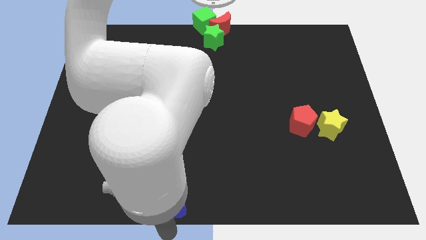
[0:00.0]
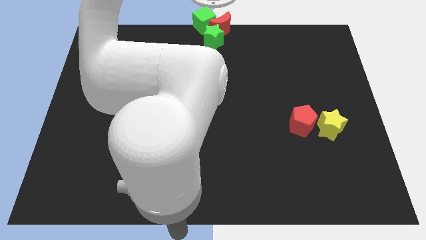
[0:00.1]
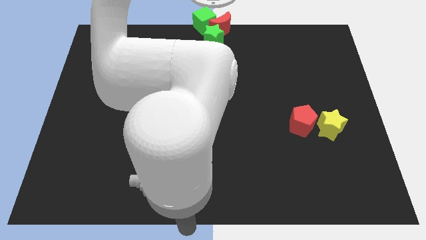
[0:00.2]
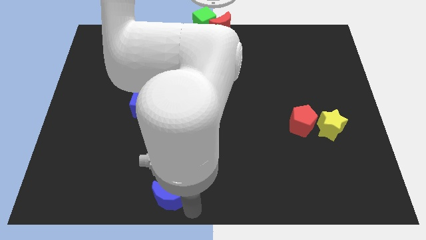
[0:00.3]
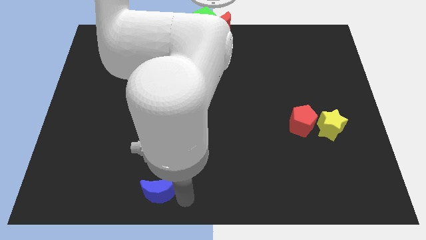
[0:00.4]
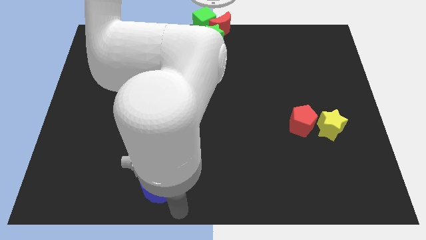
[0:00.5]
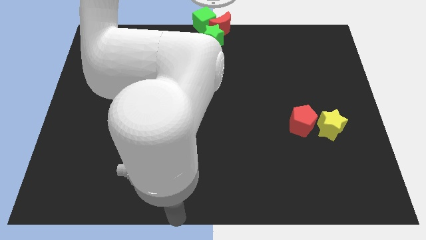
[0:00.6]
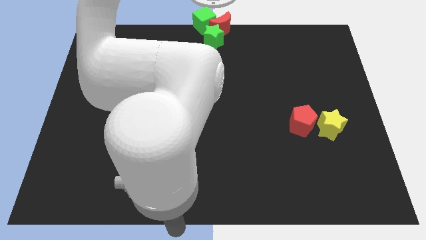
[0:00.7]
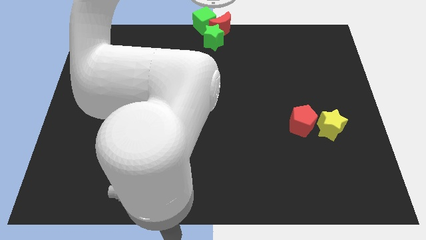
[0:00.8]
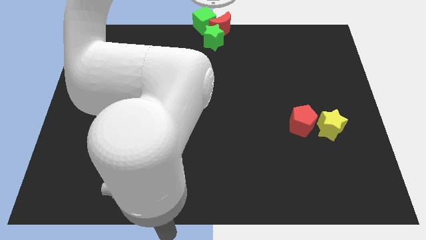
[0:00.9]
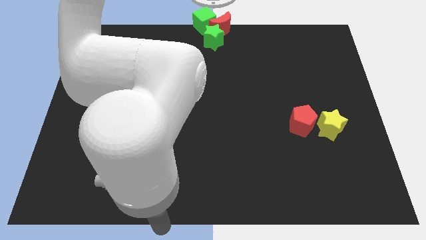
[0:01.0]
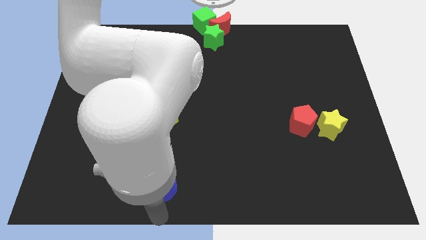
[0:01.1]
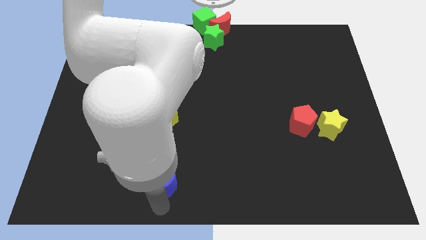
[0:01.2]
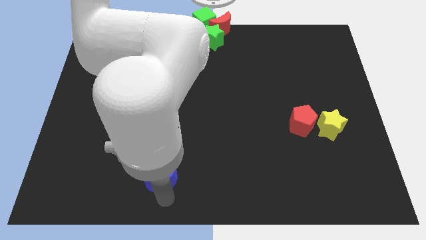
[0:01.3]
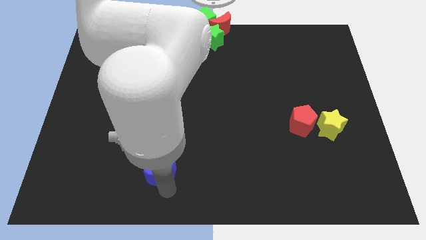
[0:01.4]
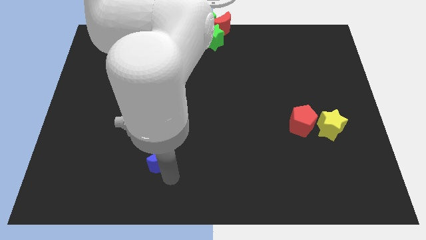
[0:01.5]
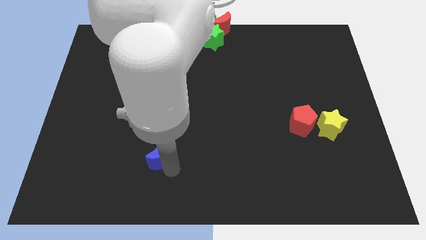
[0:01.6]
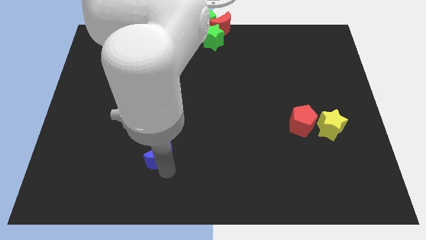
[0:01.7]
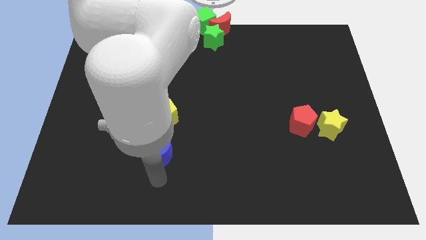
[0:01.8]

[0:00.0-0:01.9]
move the blue moon towards the yellow pentagon

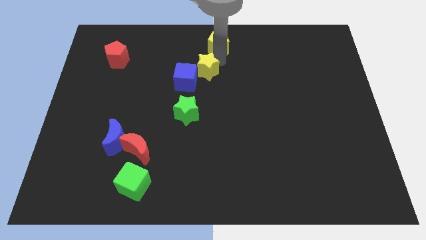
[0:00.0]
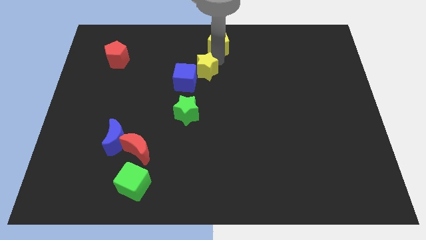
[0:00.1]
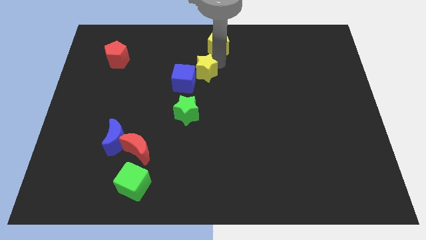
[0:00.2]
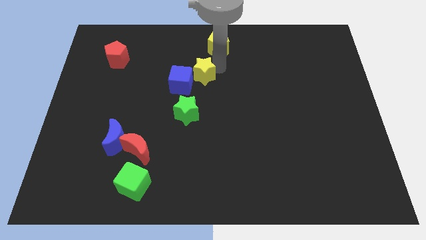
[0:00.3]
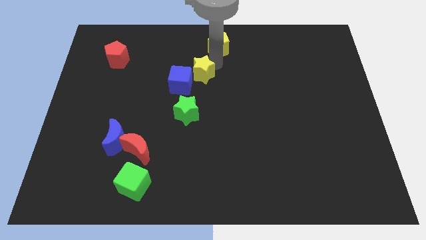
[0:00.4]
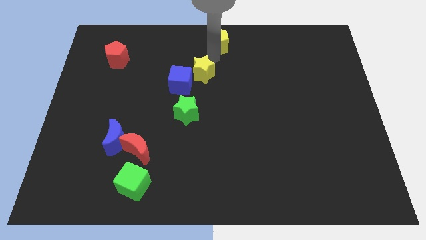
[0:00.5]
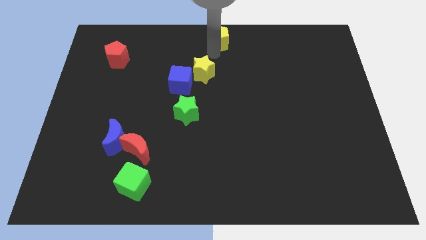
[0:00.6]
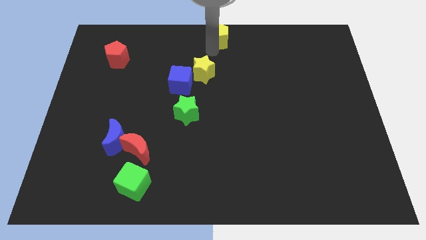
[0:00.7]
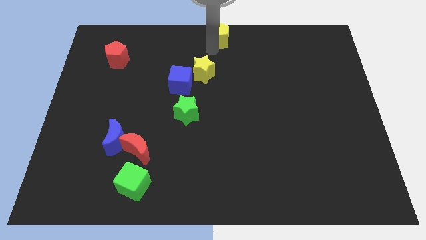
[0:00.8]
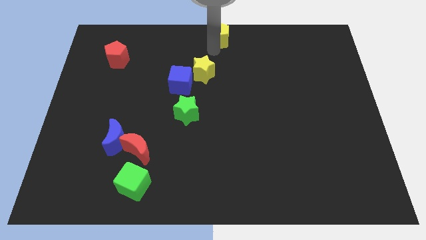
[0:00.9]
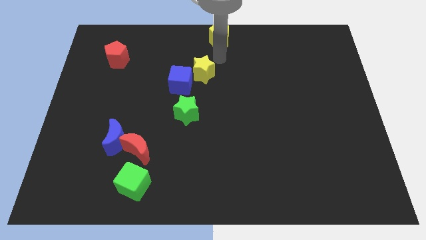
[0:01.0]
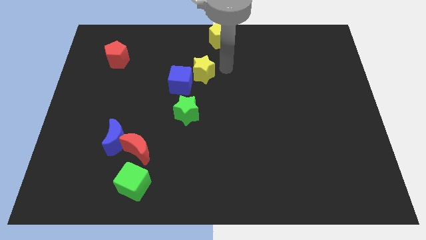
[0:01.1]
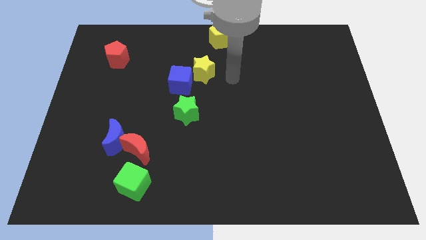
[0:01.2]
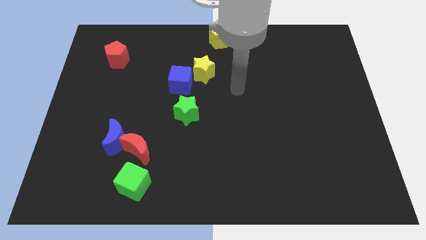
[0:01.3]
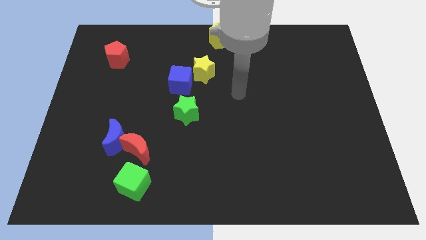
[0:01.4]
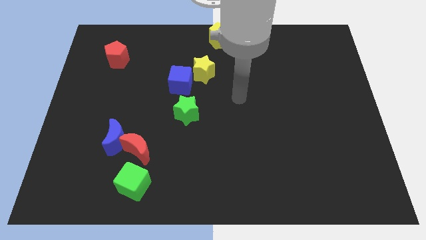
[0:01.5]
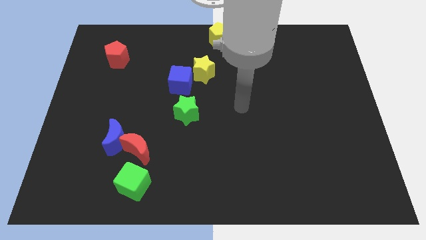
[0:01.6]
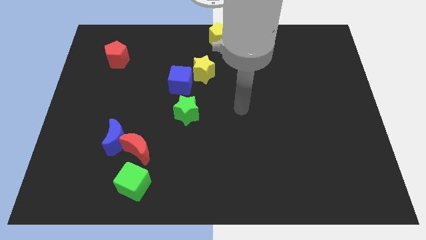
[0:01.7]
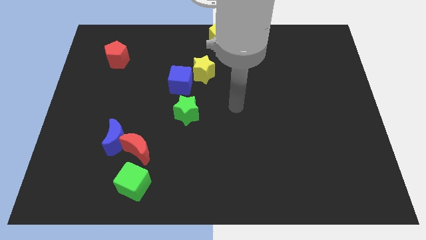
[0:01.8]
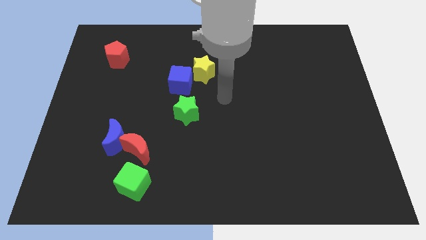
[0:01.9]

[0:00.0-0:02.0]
move the yellow pentagon to the top center

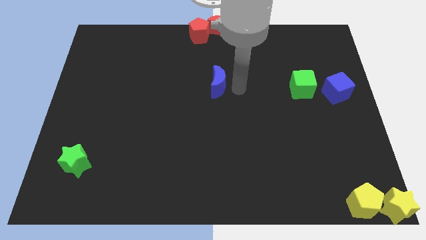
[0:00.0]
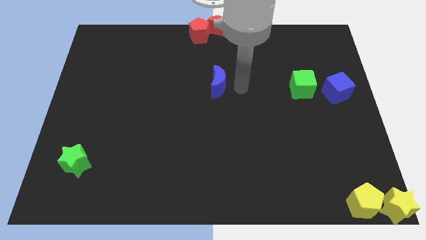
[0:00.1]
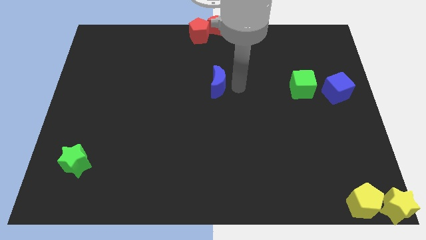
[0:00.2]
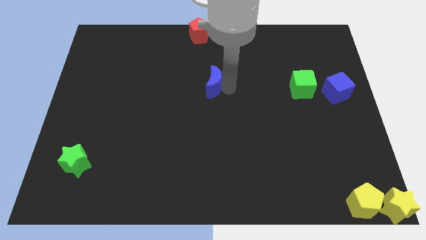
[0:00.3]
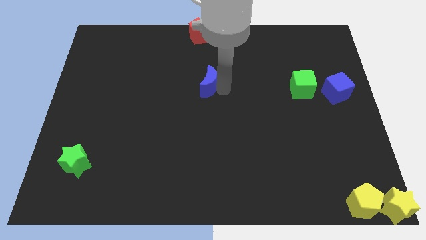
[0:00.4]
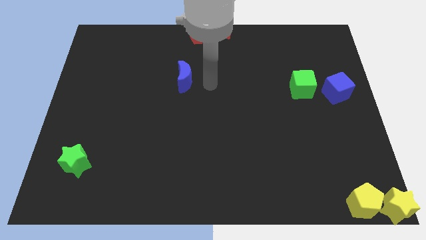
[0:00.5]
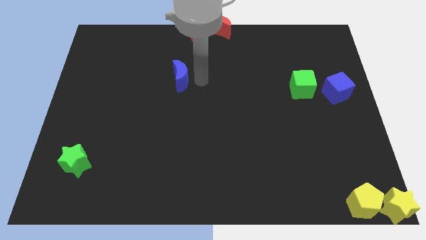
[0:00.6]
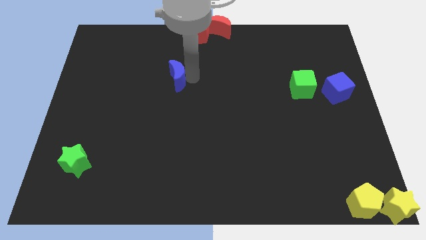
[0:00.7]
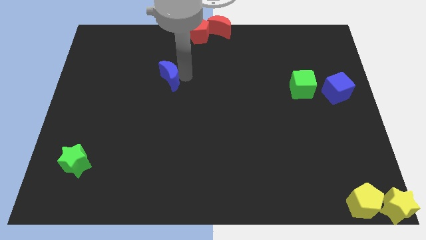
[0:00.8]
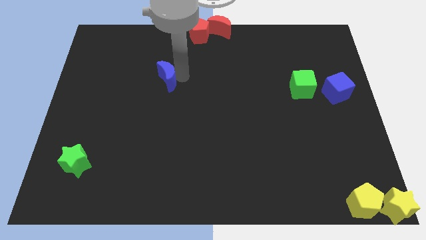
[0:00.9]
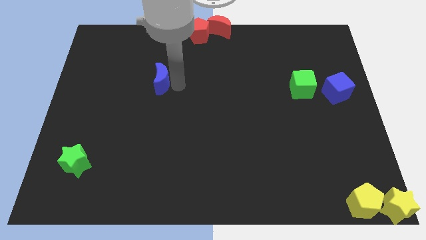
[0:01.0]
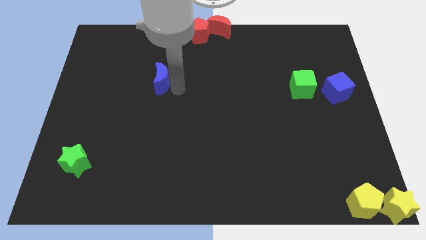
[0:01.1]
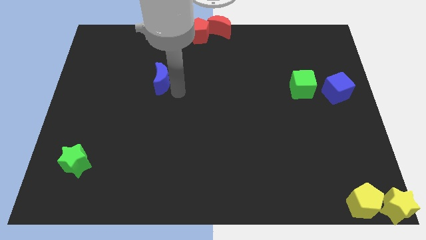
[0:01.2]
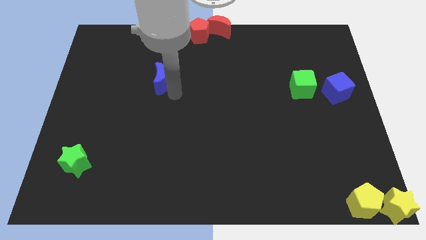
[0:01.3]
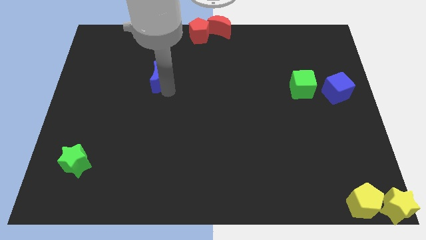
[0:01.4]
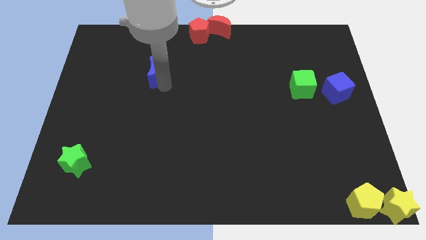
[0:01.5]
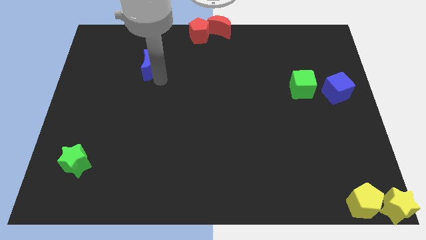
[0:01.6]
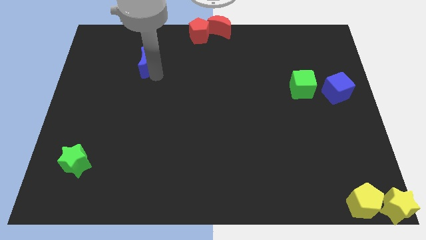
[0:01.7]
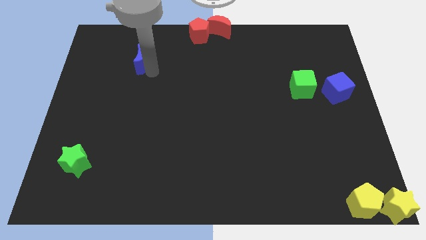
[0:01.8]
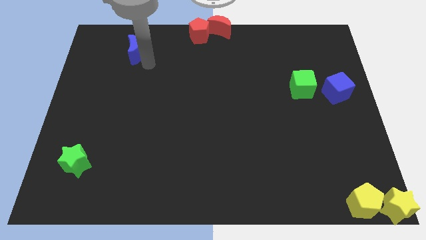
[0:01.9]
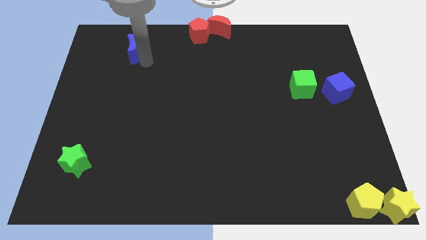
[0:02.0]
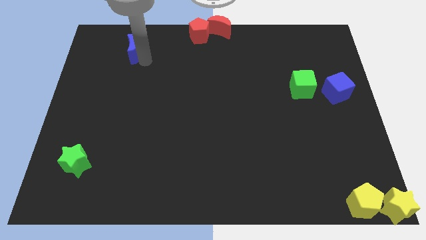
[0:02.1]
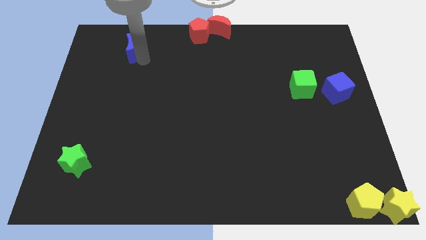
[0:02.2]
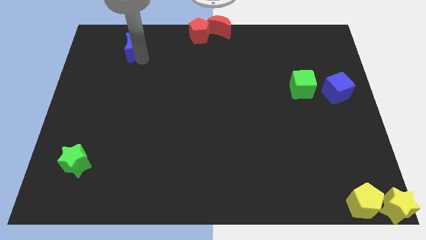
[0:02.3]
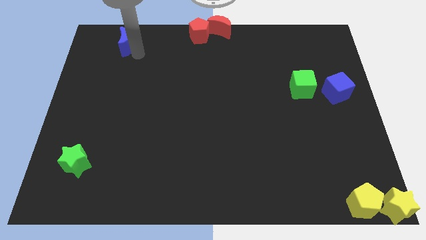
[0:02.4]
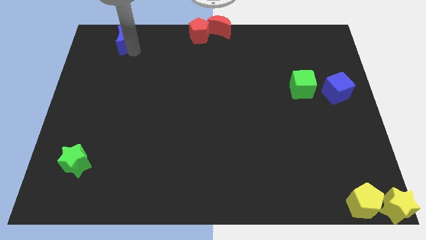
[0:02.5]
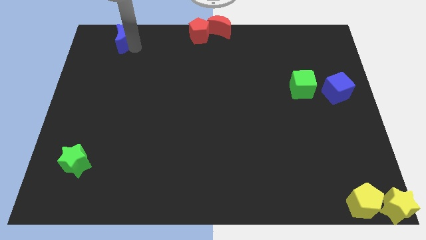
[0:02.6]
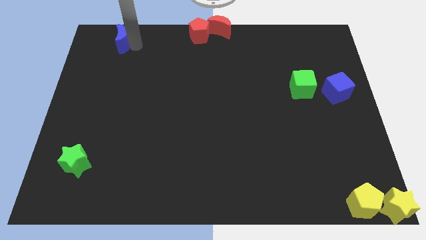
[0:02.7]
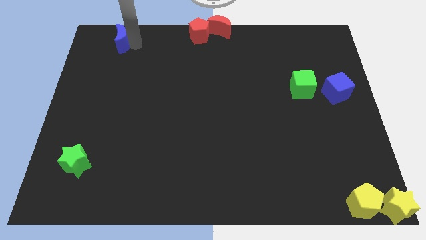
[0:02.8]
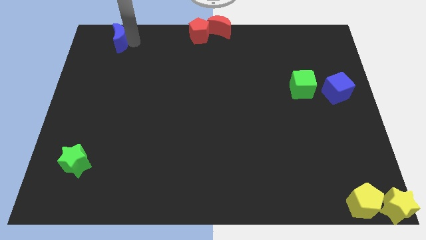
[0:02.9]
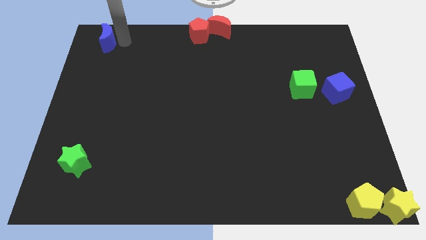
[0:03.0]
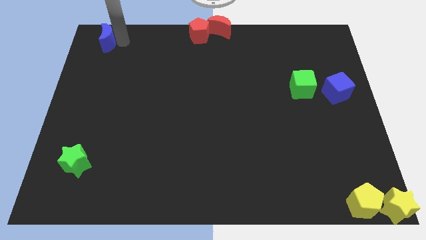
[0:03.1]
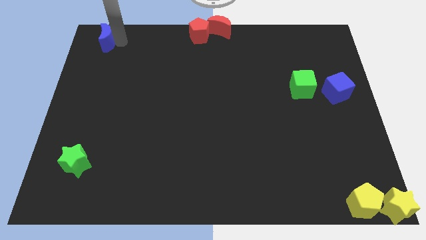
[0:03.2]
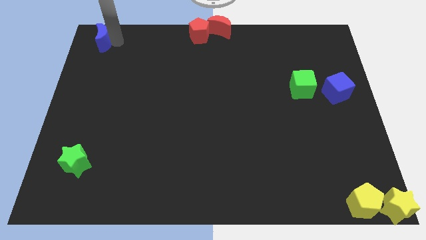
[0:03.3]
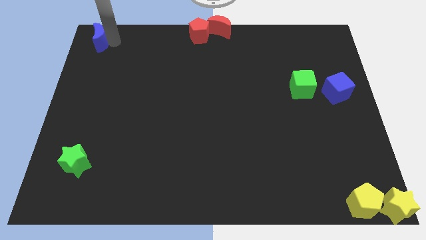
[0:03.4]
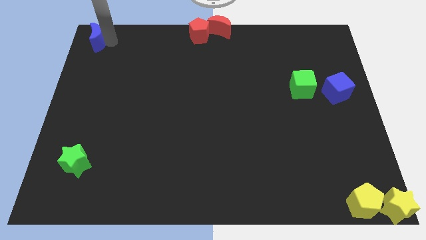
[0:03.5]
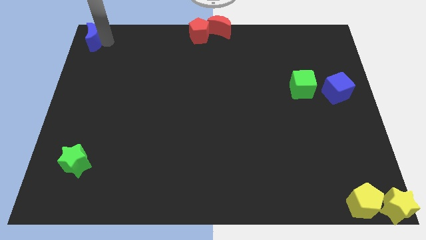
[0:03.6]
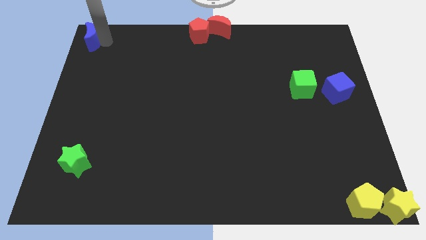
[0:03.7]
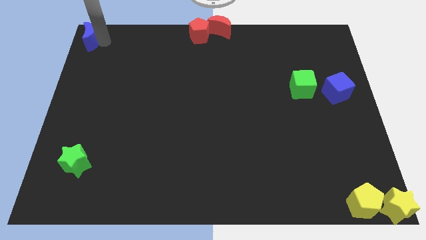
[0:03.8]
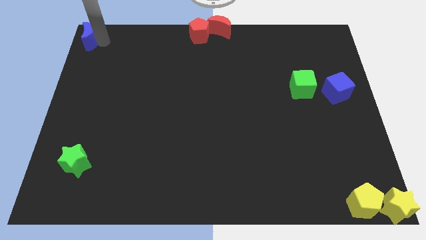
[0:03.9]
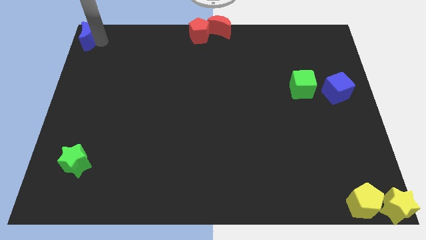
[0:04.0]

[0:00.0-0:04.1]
move blue moon to the top left

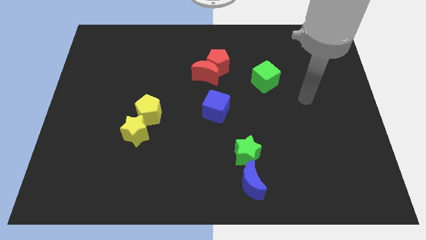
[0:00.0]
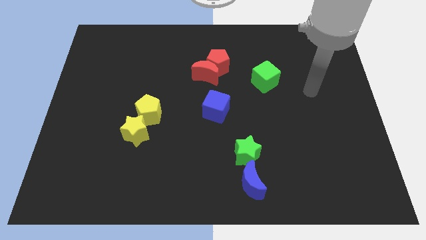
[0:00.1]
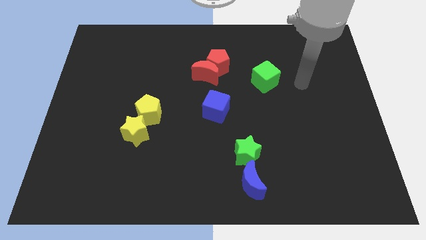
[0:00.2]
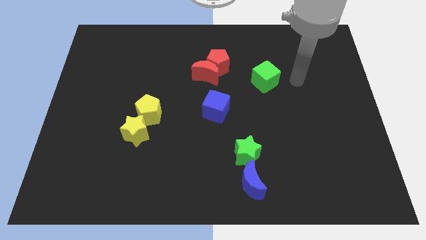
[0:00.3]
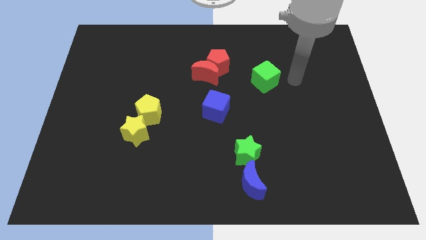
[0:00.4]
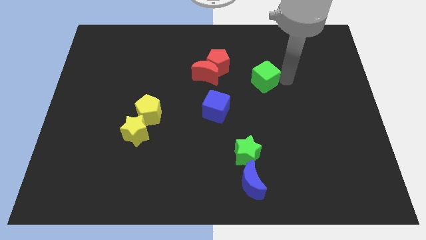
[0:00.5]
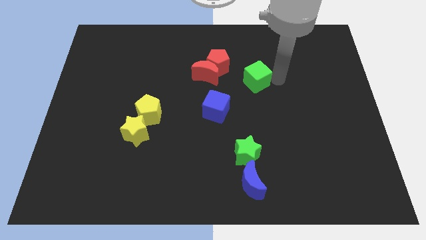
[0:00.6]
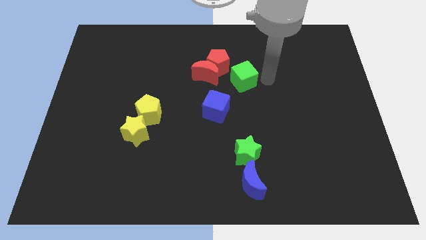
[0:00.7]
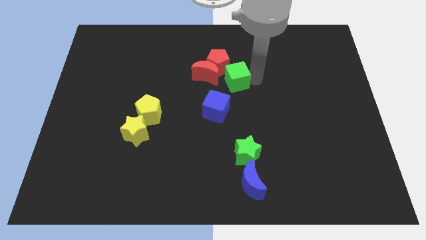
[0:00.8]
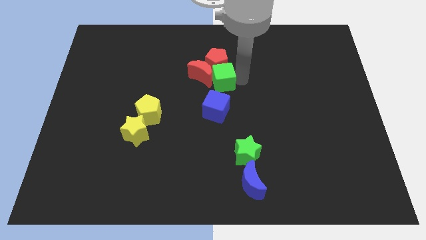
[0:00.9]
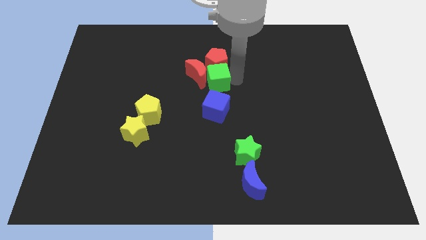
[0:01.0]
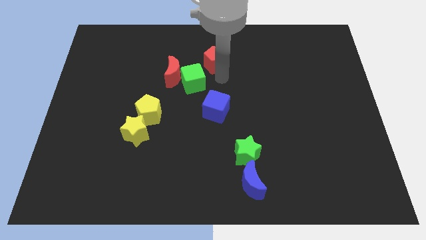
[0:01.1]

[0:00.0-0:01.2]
push the green cube into red crescent
